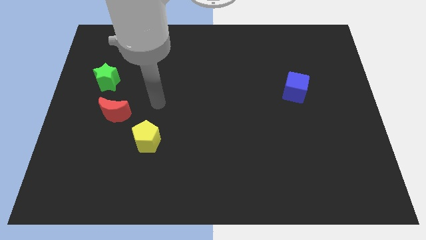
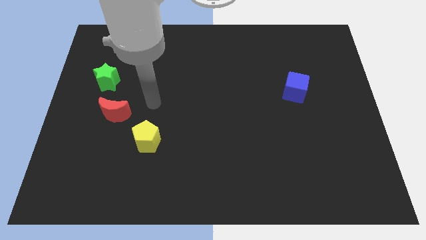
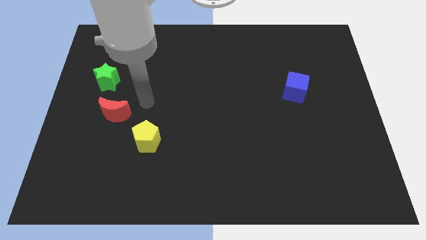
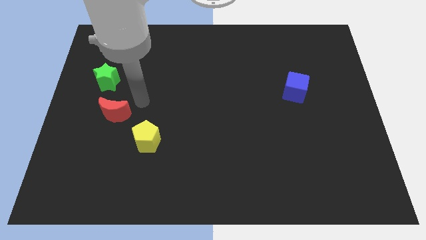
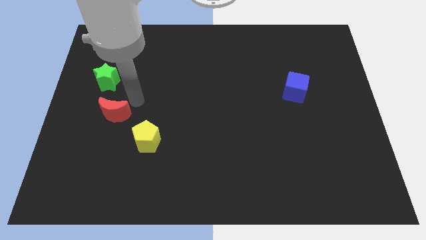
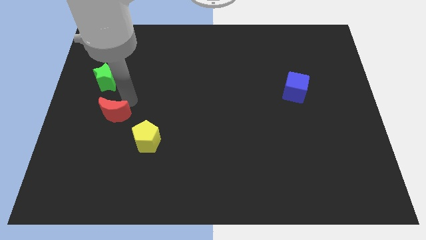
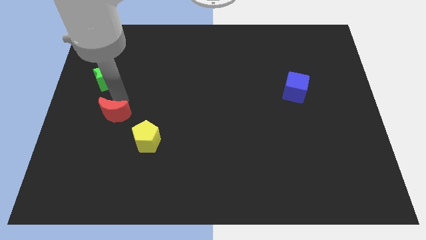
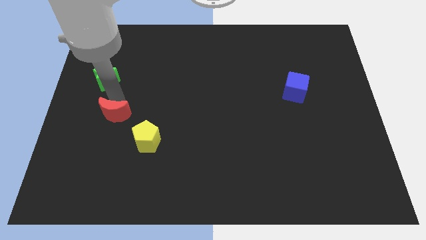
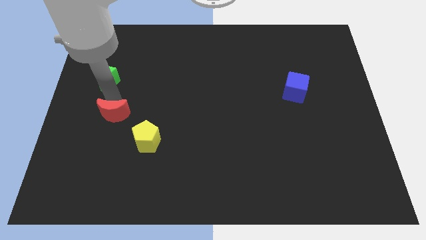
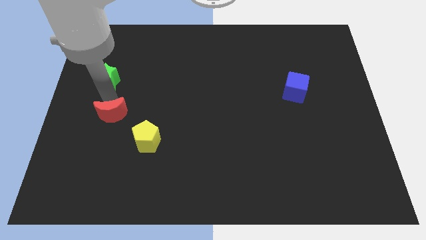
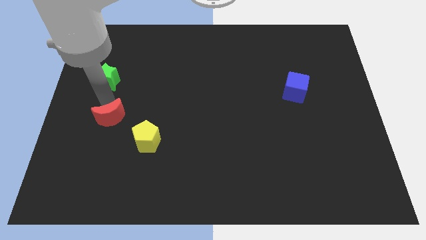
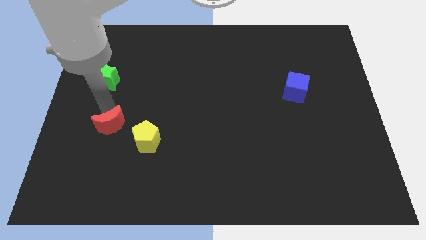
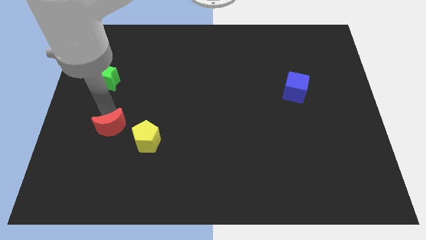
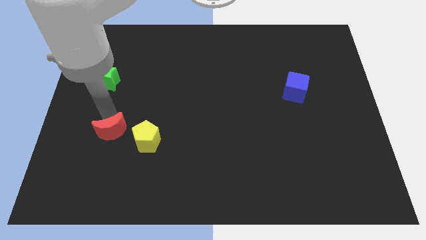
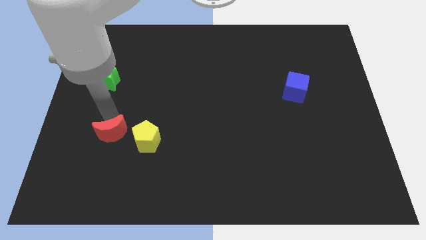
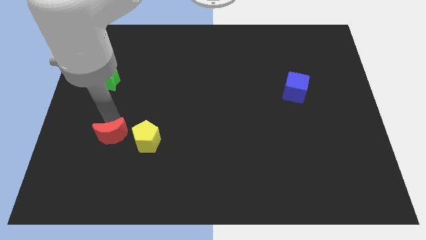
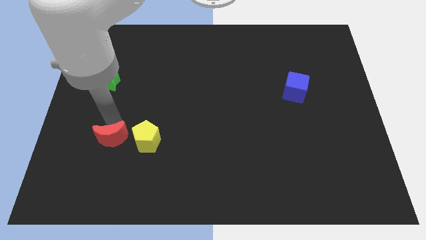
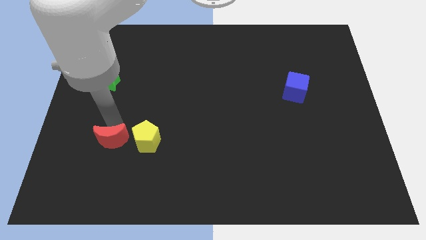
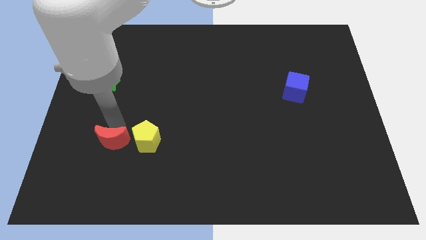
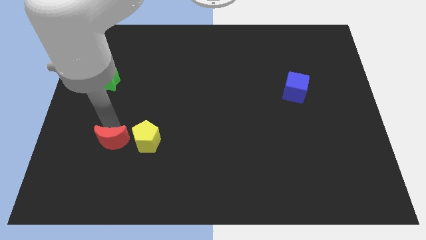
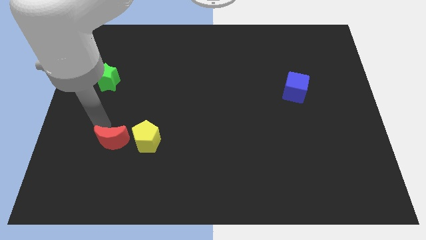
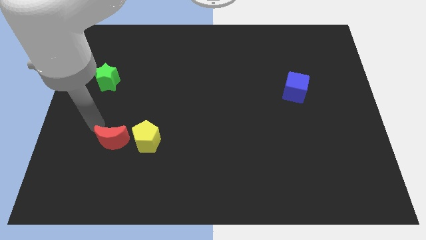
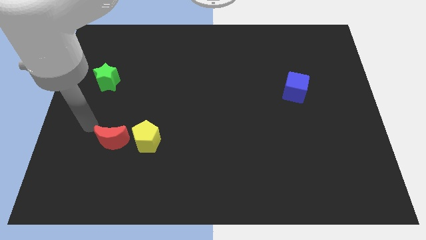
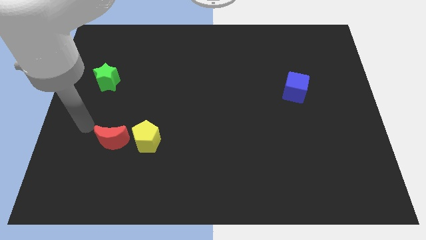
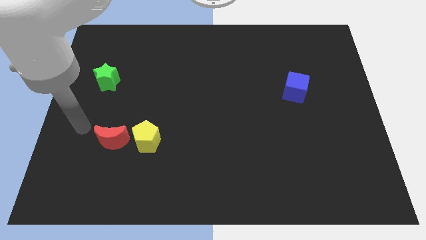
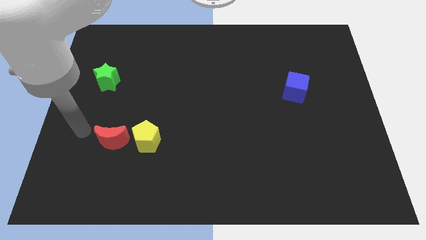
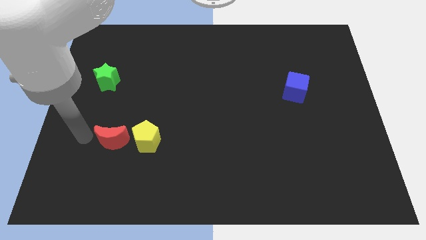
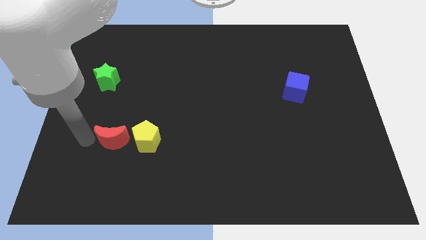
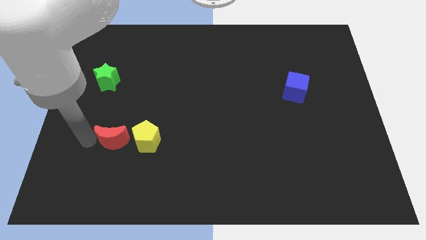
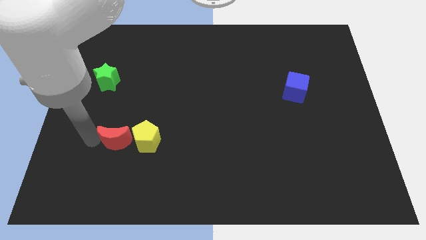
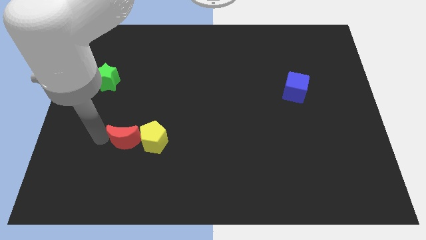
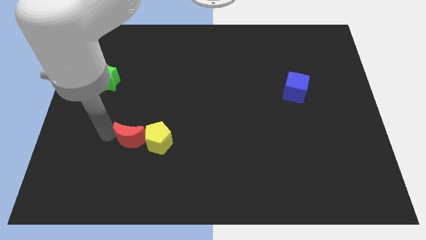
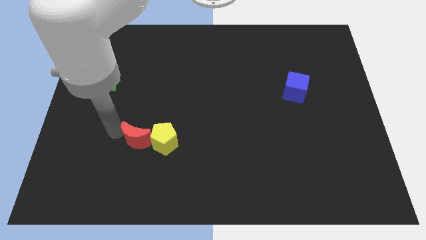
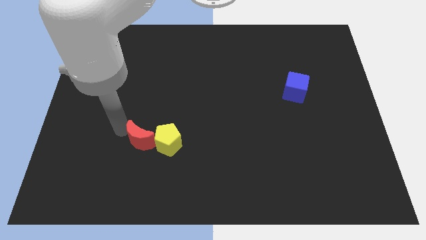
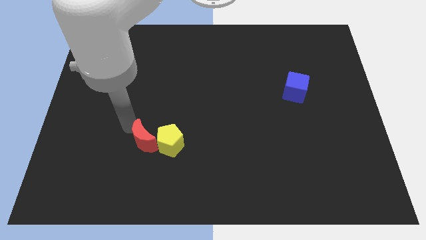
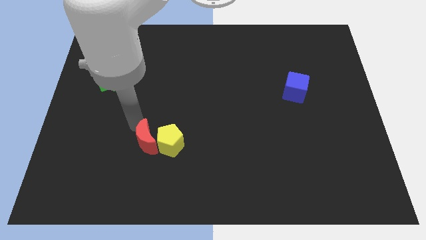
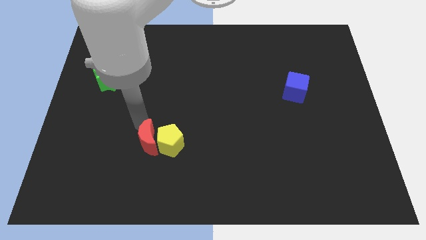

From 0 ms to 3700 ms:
move the red moon towards the yellow block

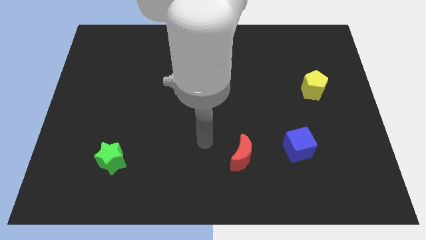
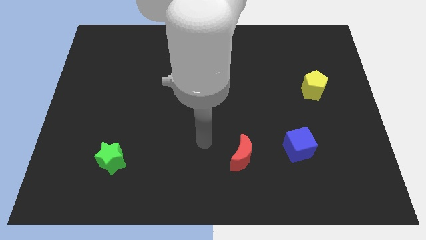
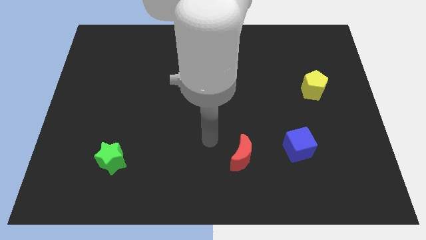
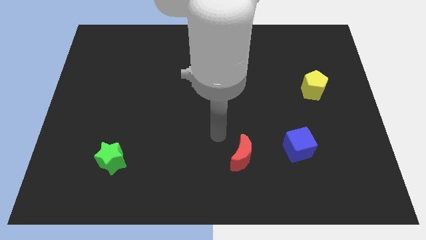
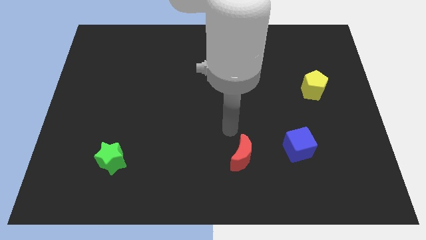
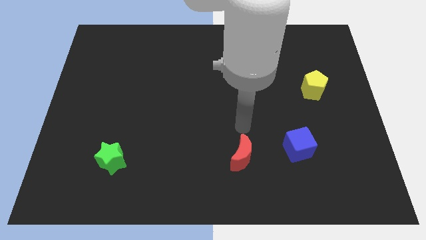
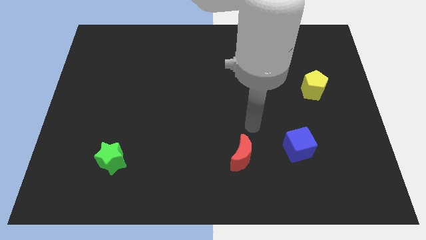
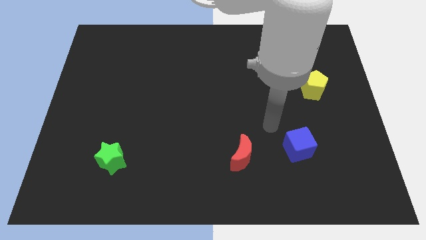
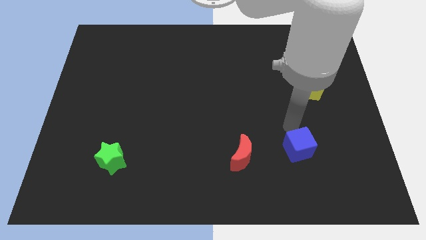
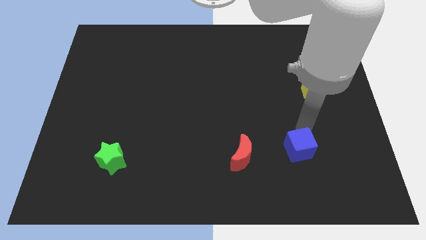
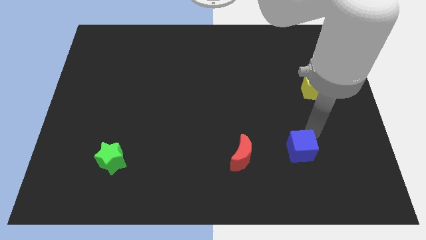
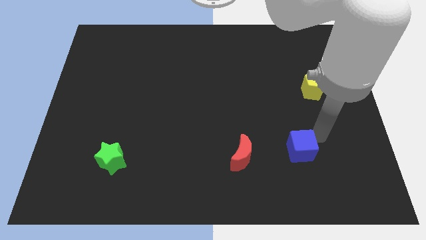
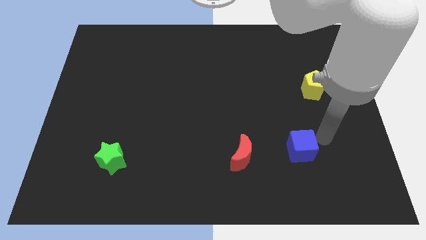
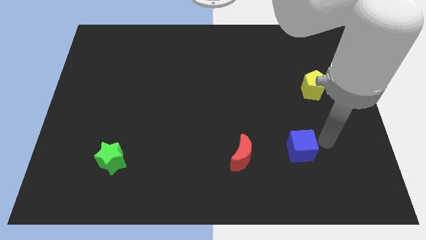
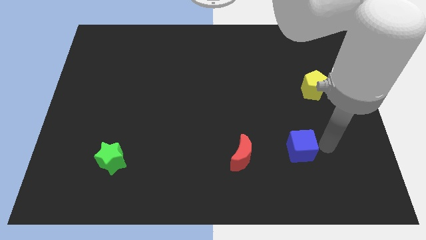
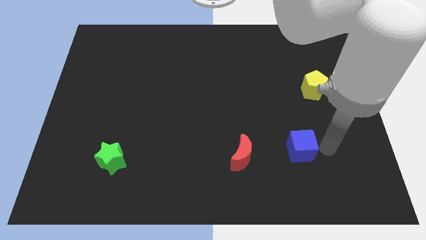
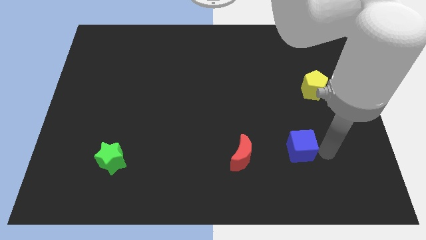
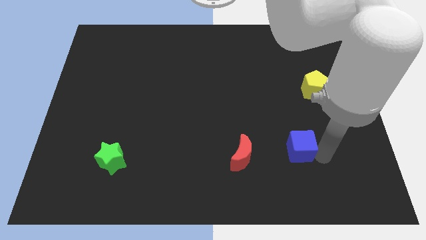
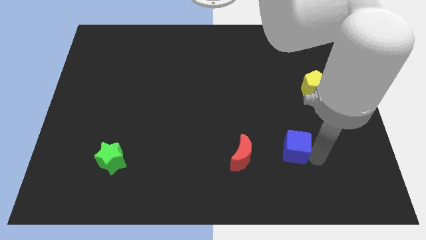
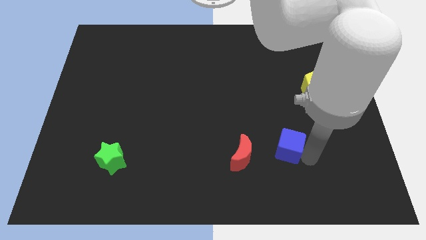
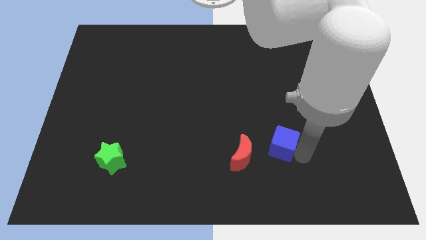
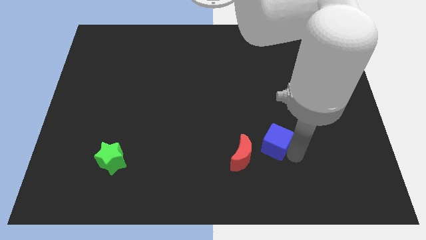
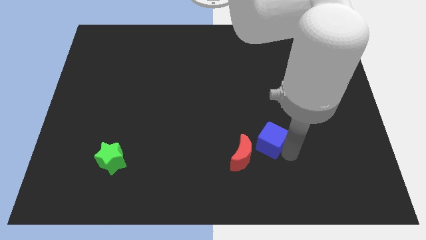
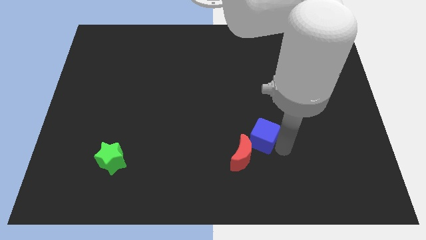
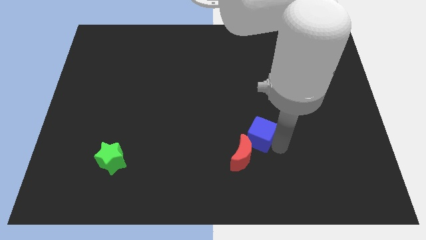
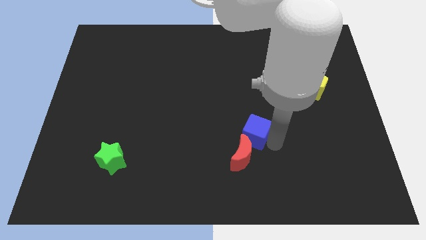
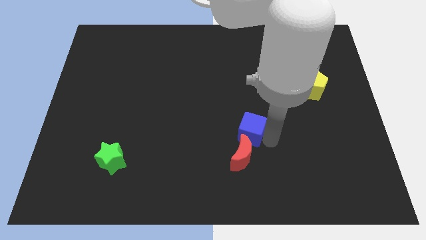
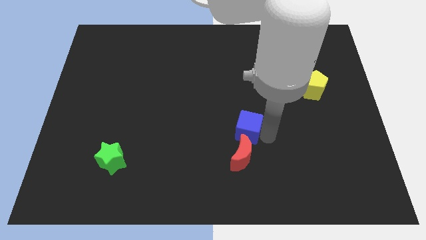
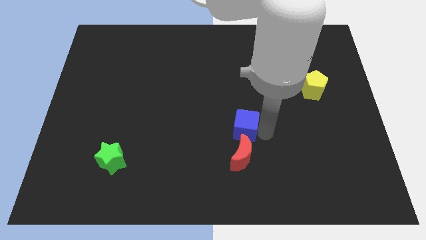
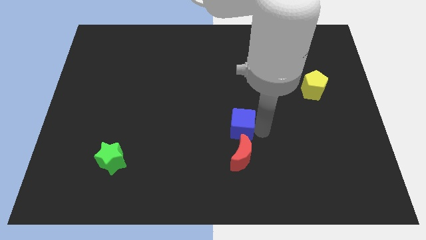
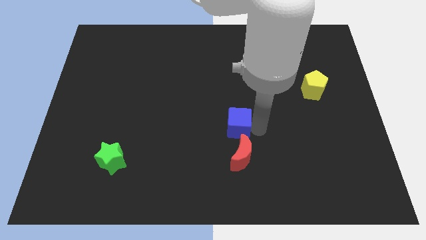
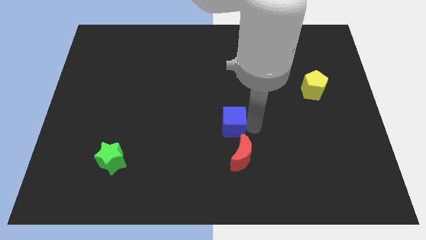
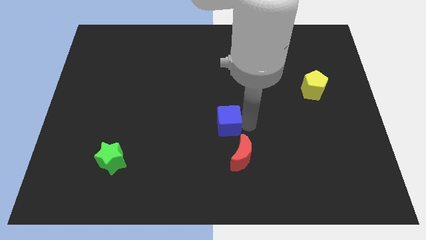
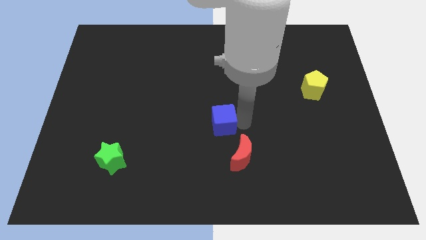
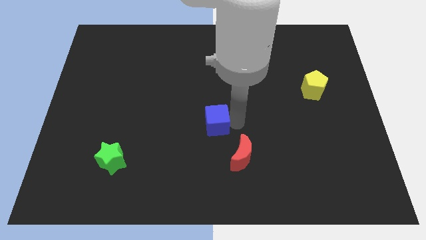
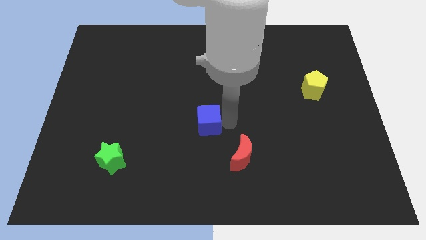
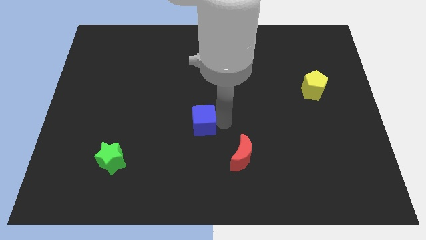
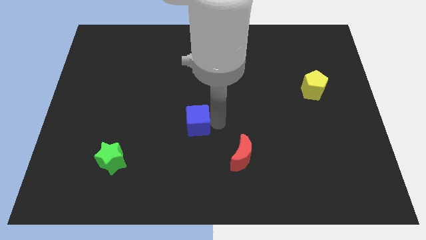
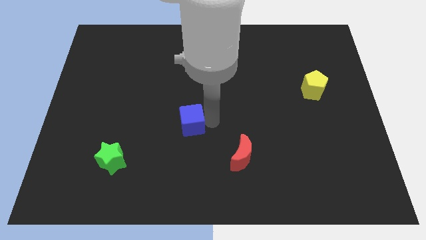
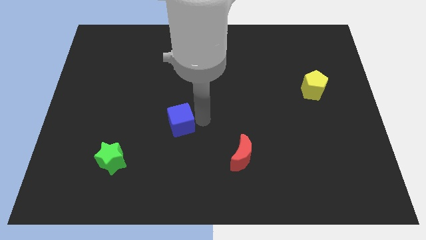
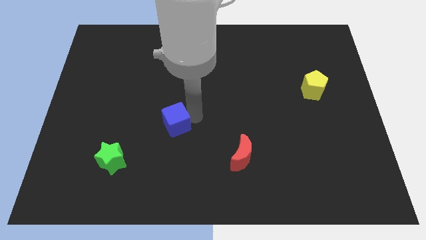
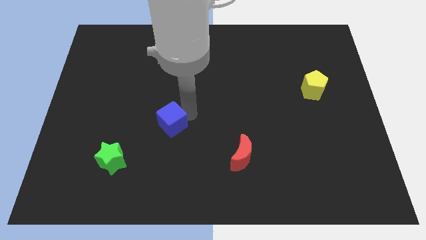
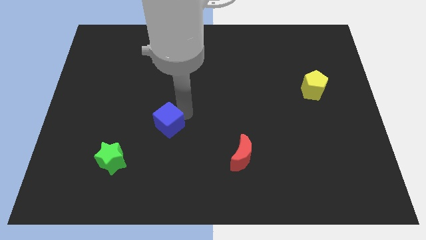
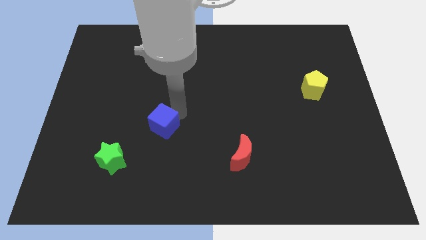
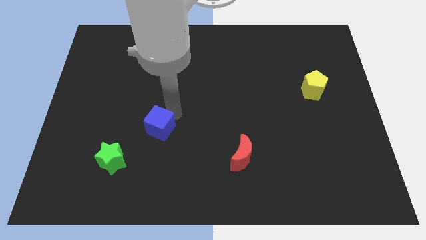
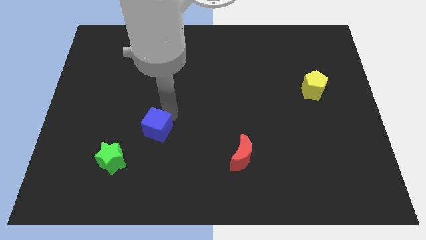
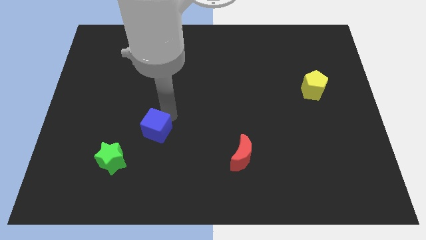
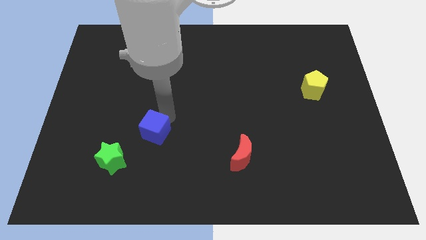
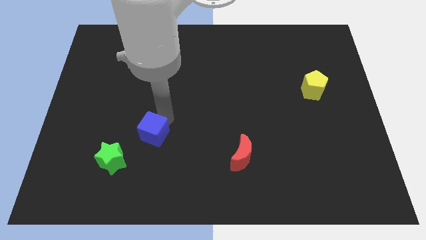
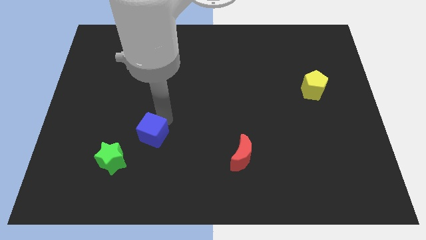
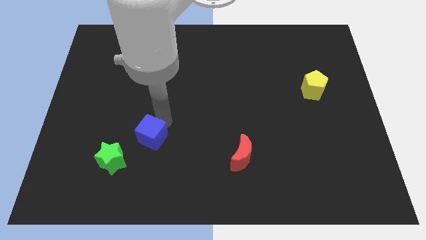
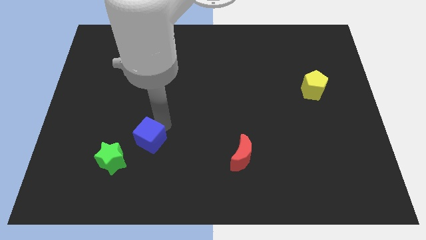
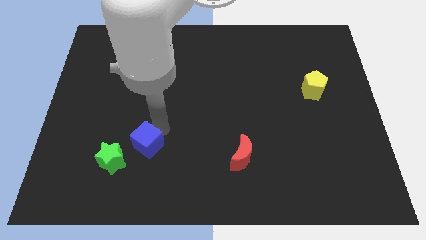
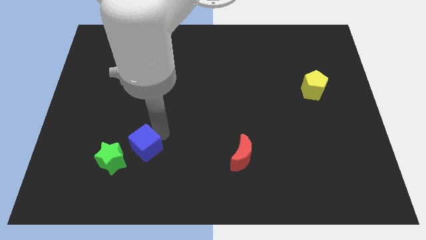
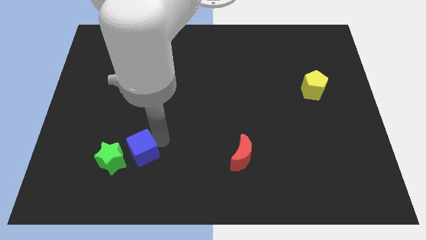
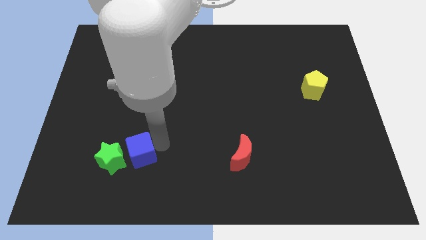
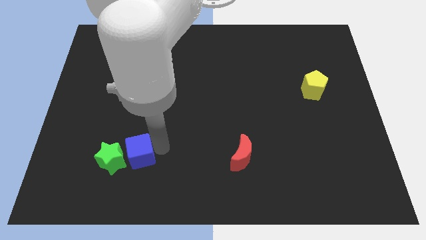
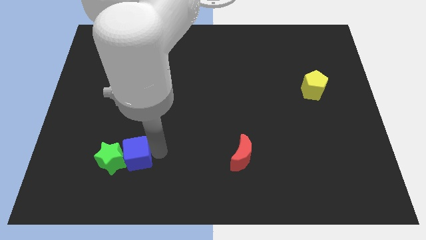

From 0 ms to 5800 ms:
push the blue cube close to the star
